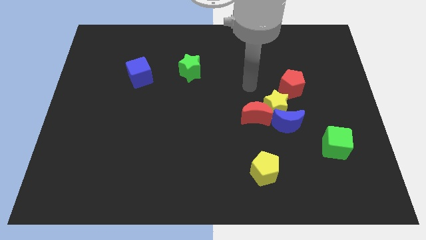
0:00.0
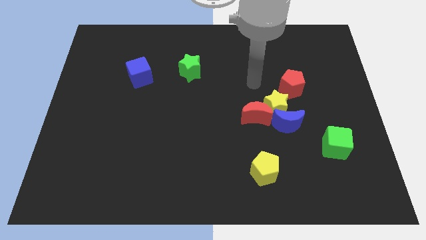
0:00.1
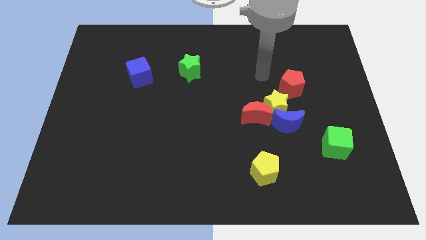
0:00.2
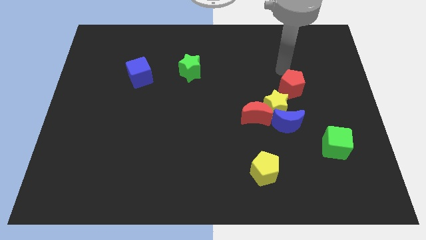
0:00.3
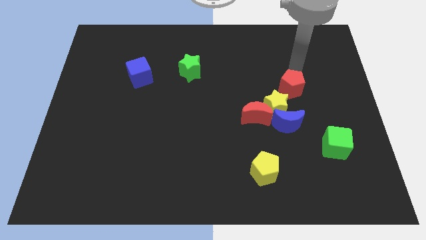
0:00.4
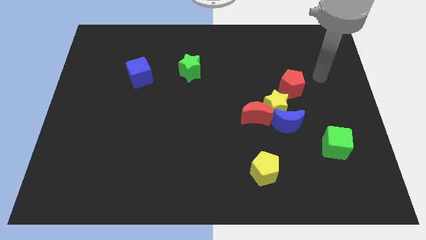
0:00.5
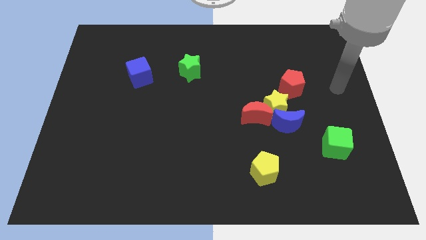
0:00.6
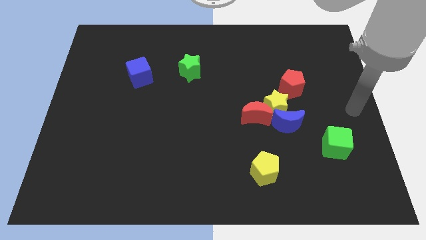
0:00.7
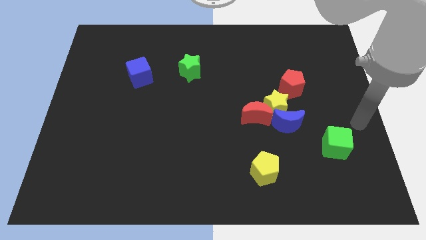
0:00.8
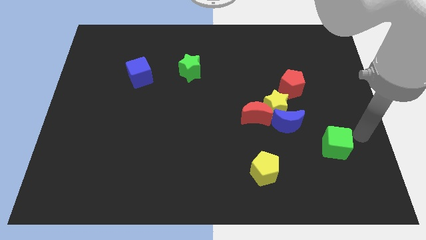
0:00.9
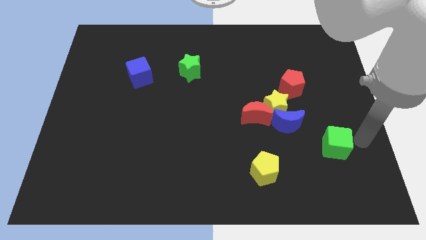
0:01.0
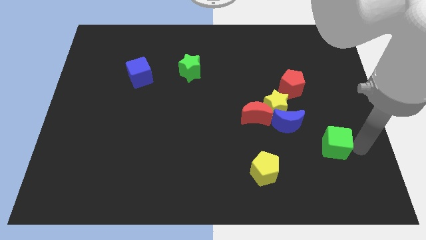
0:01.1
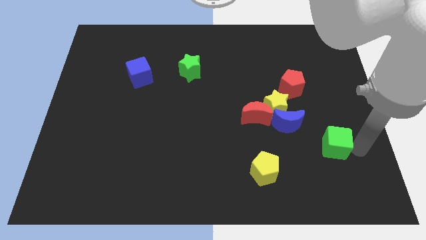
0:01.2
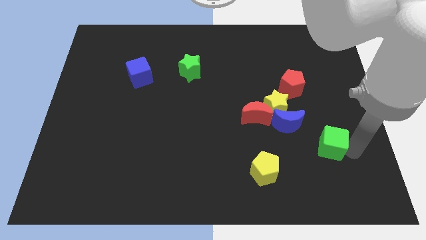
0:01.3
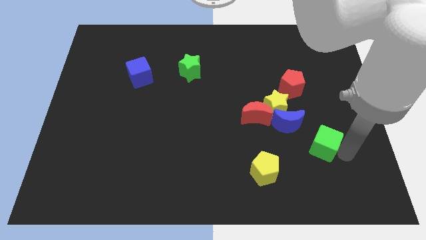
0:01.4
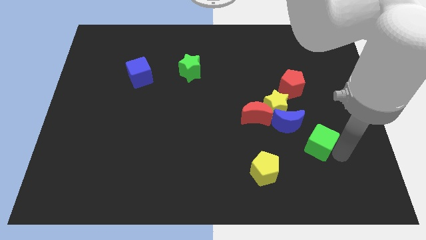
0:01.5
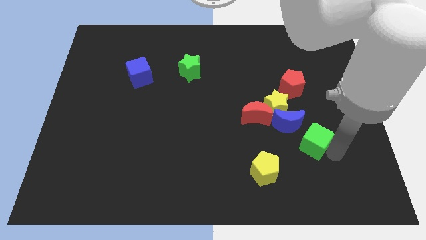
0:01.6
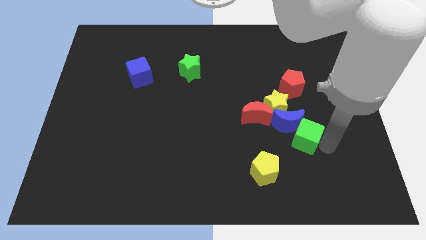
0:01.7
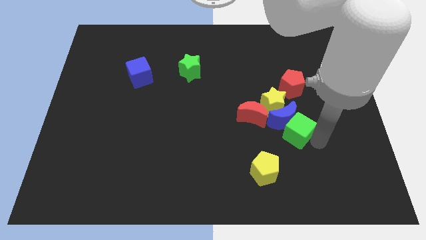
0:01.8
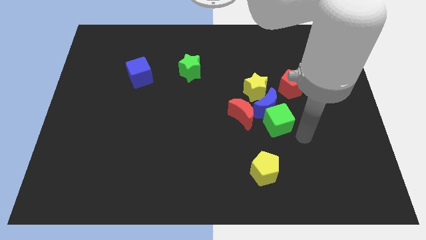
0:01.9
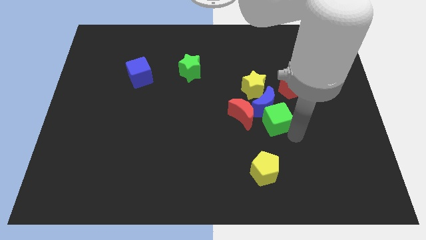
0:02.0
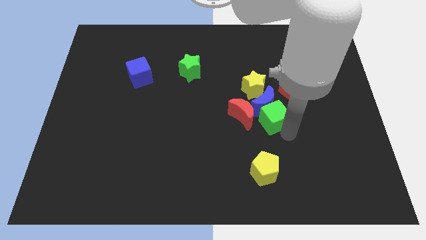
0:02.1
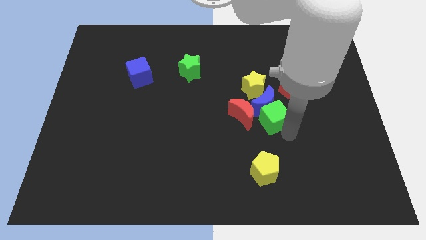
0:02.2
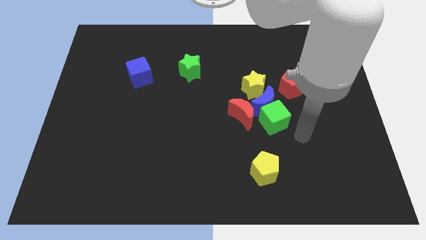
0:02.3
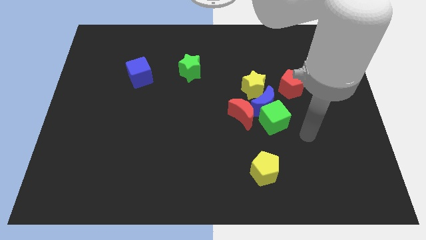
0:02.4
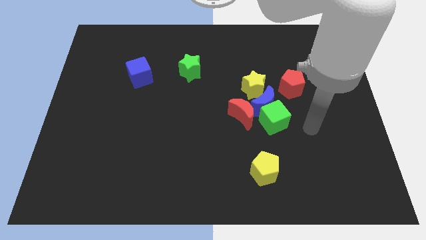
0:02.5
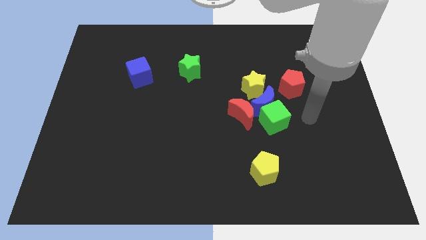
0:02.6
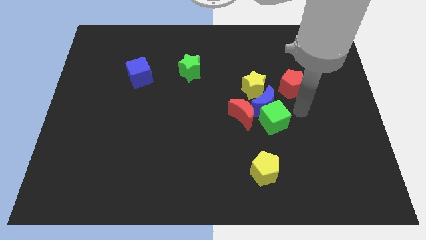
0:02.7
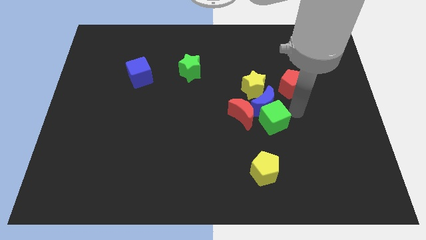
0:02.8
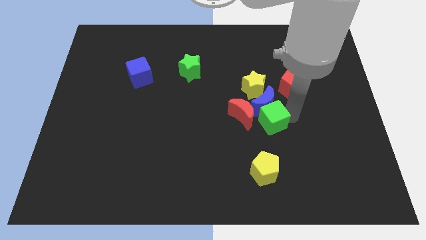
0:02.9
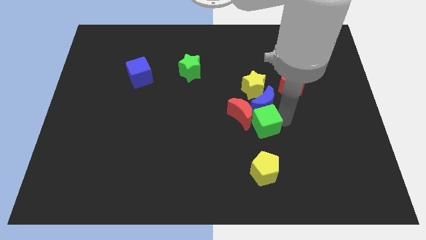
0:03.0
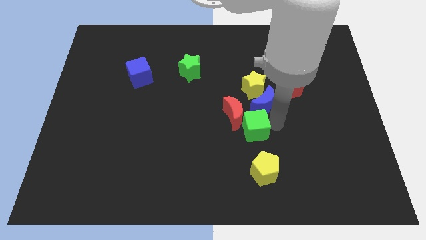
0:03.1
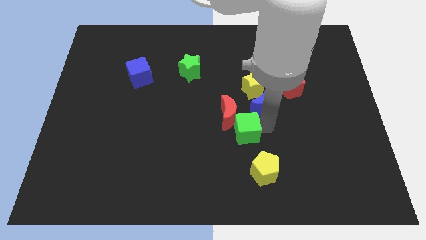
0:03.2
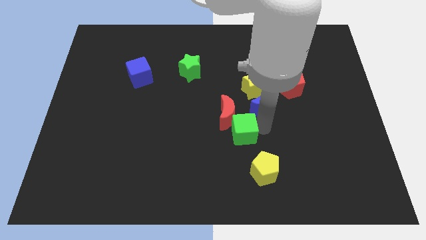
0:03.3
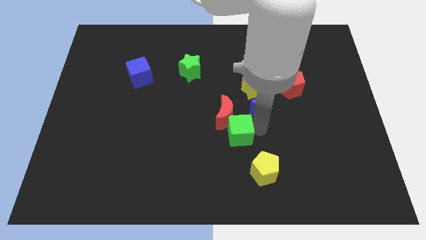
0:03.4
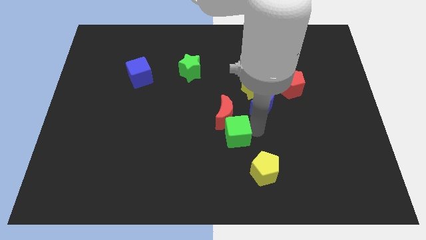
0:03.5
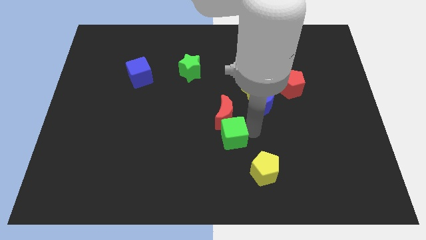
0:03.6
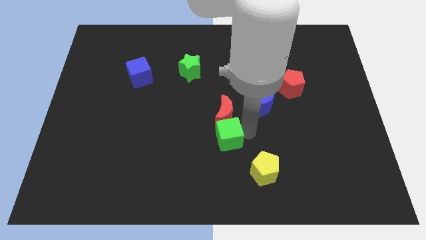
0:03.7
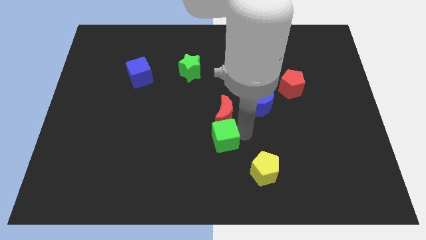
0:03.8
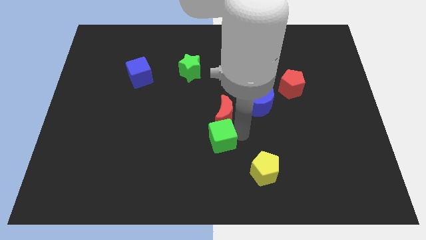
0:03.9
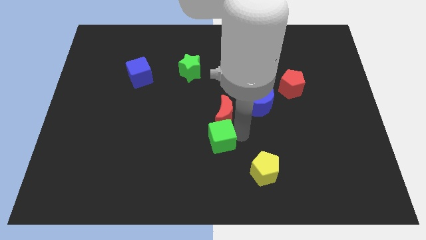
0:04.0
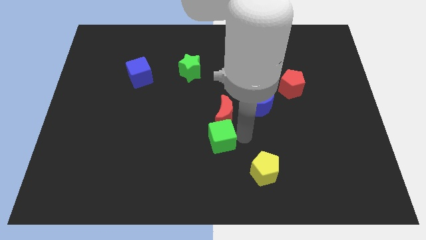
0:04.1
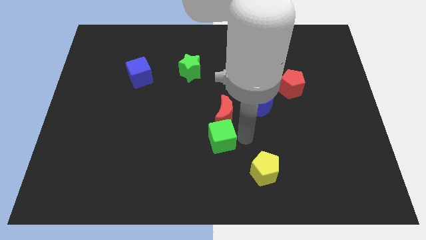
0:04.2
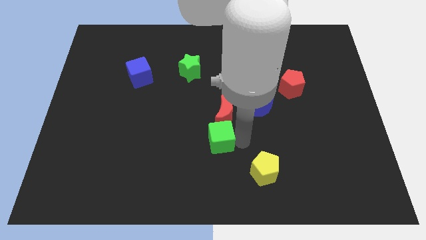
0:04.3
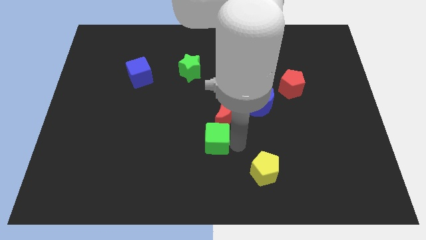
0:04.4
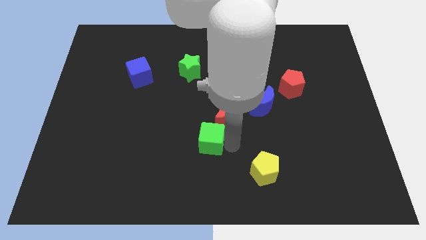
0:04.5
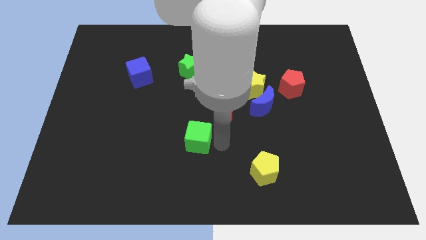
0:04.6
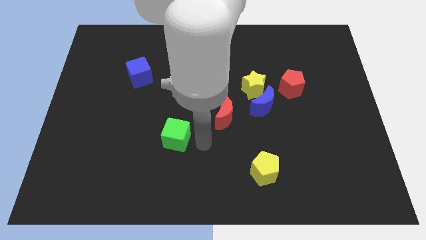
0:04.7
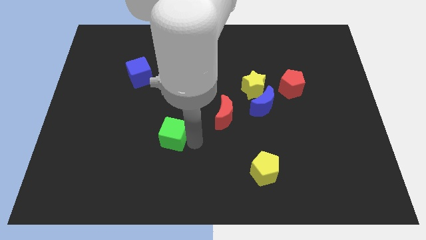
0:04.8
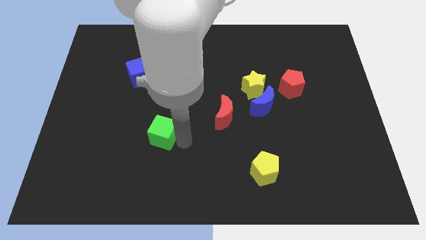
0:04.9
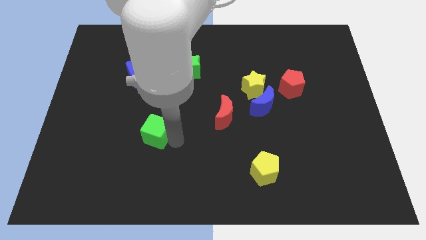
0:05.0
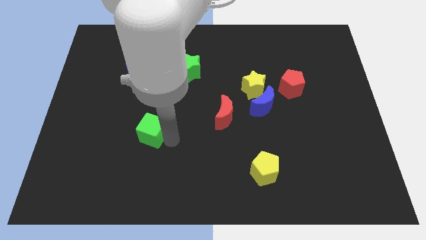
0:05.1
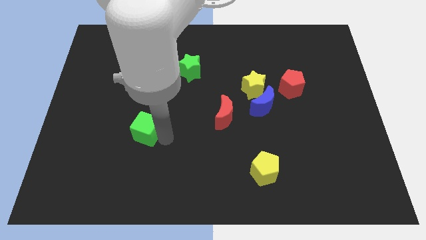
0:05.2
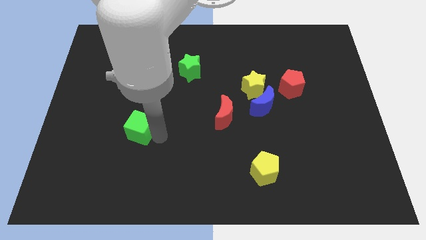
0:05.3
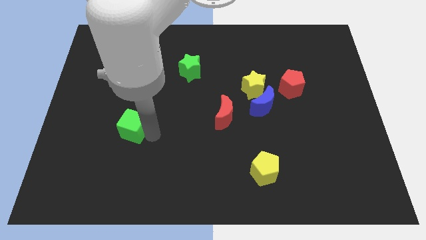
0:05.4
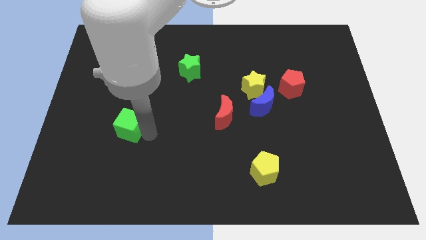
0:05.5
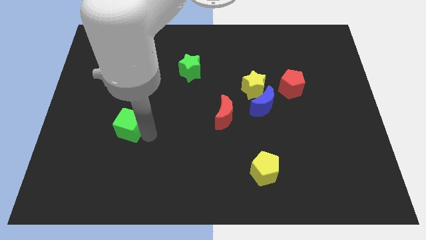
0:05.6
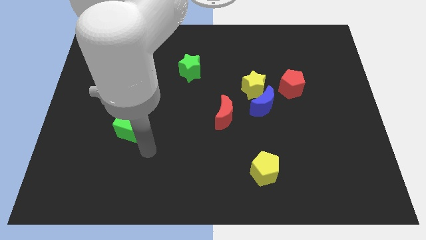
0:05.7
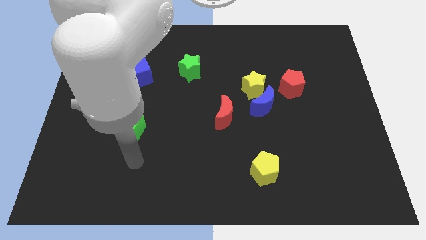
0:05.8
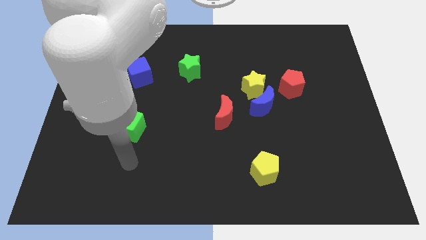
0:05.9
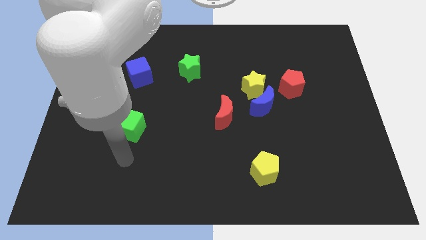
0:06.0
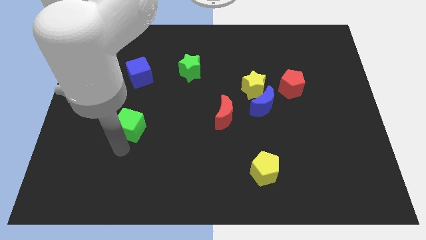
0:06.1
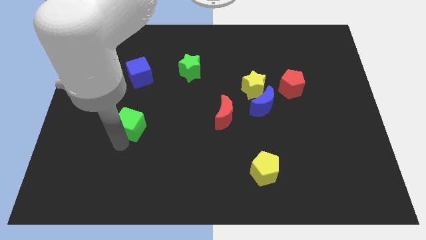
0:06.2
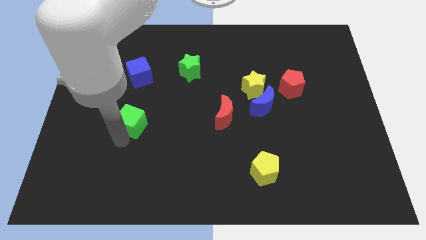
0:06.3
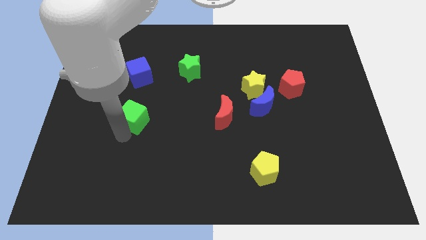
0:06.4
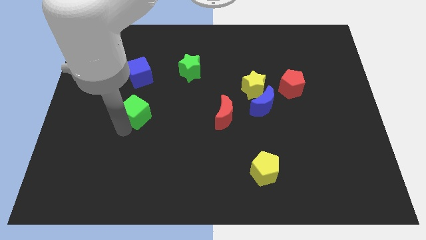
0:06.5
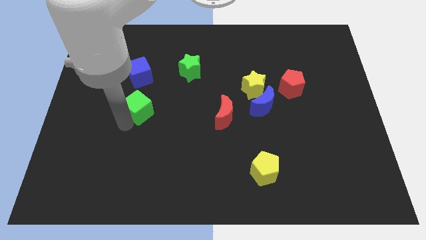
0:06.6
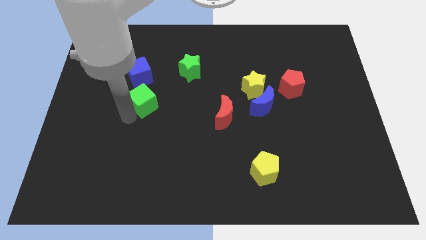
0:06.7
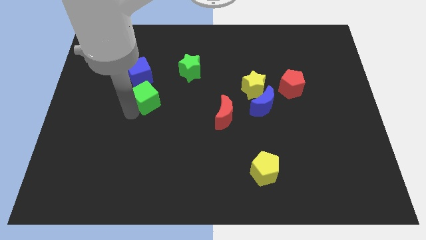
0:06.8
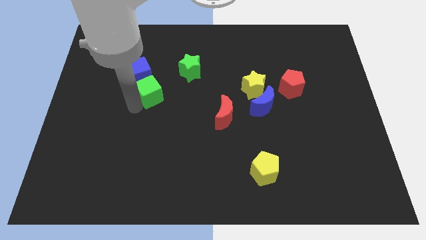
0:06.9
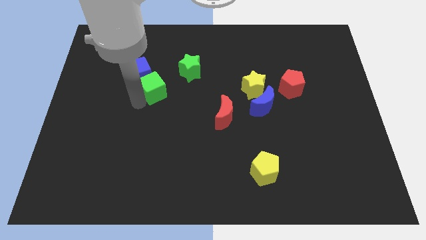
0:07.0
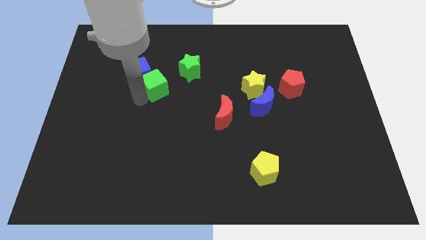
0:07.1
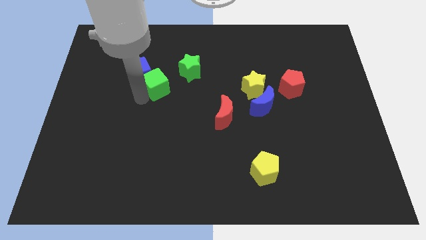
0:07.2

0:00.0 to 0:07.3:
slide the green cube to the blue cube

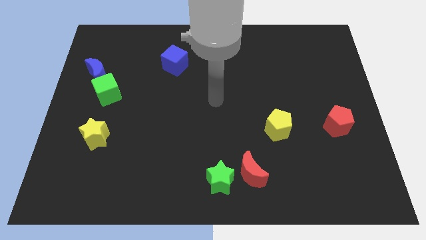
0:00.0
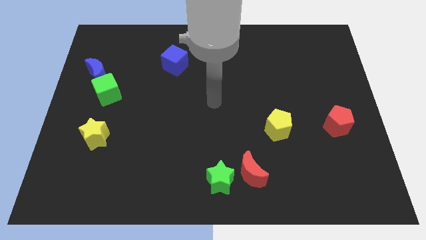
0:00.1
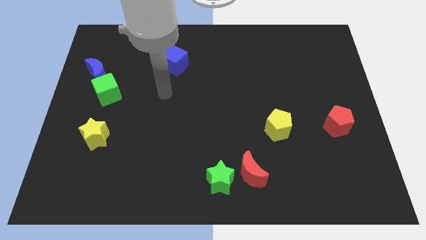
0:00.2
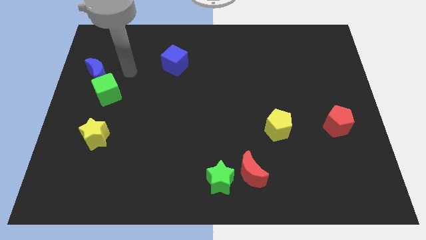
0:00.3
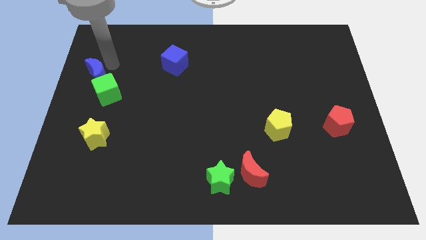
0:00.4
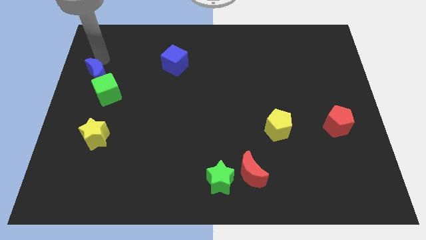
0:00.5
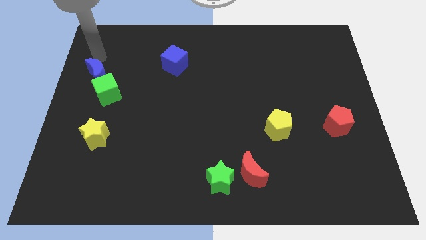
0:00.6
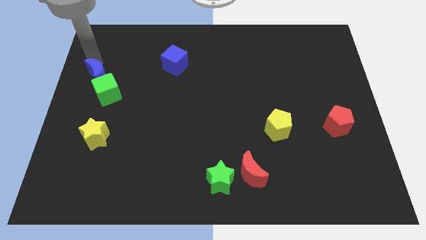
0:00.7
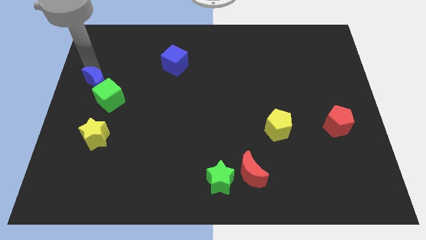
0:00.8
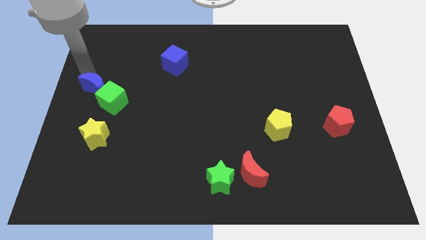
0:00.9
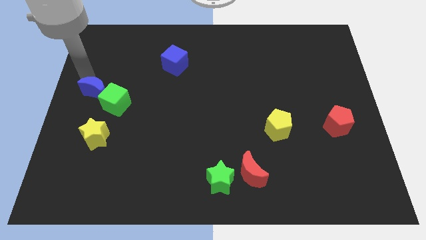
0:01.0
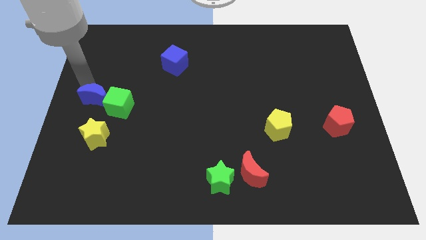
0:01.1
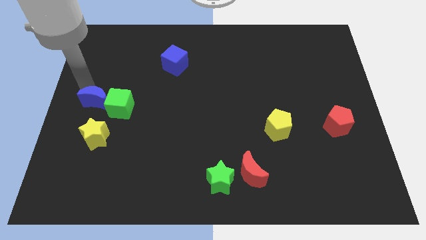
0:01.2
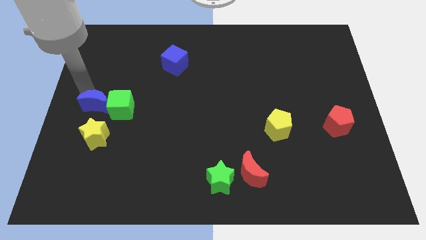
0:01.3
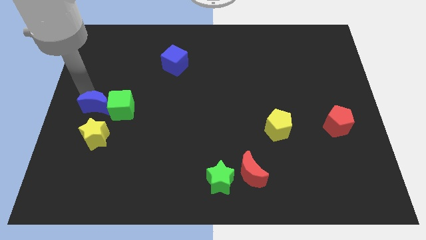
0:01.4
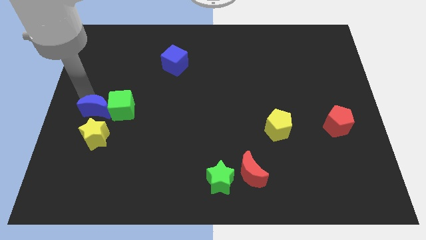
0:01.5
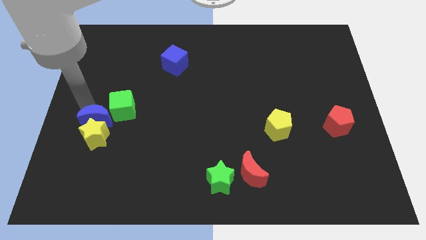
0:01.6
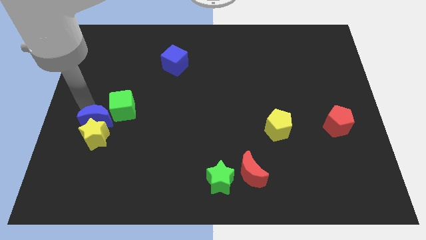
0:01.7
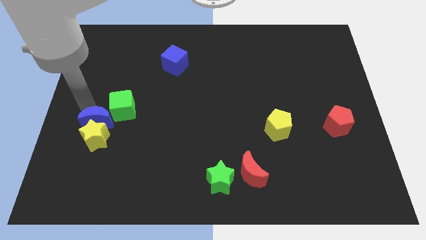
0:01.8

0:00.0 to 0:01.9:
put the blue moon towards the yellow star
